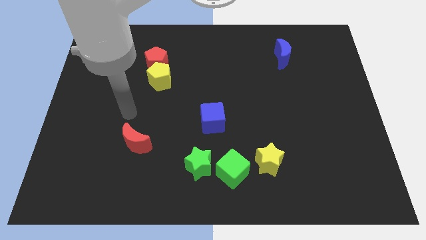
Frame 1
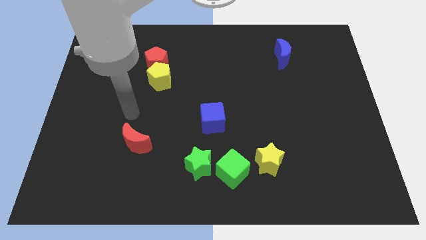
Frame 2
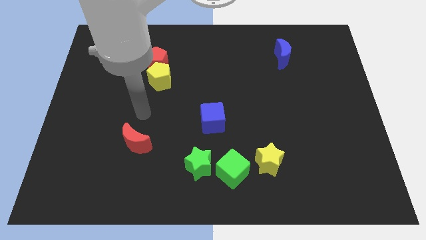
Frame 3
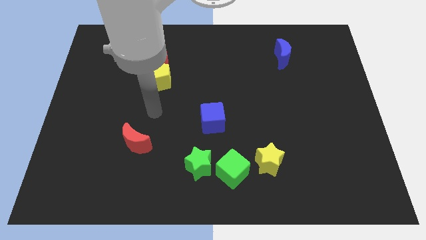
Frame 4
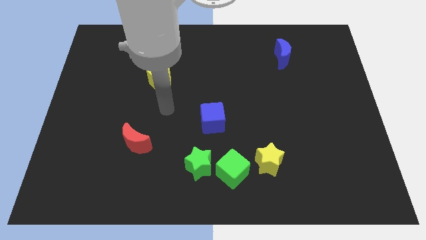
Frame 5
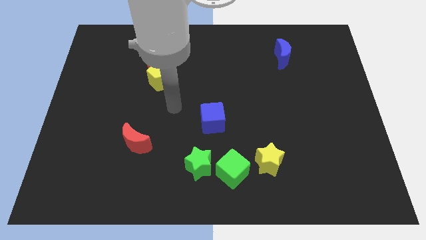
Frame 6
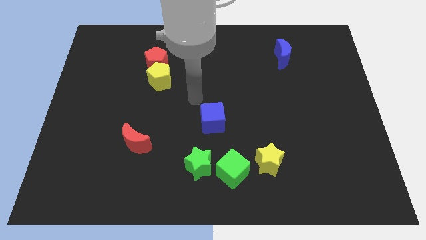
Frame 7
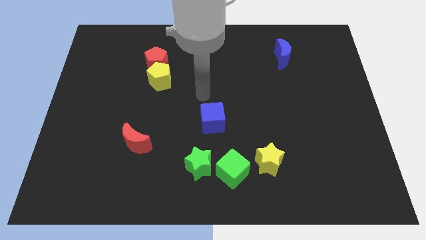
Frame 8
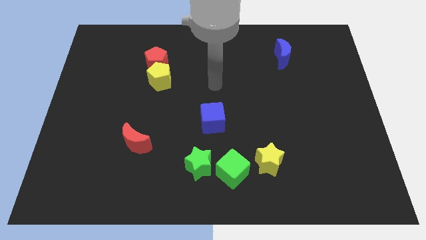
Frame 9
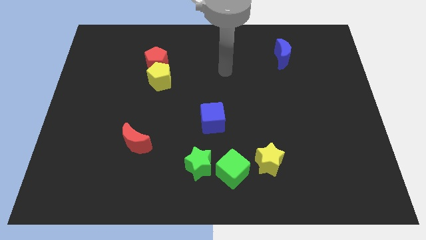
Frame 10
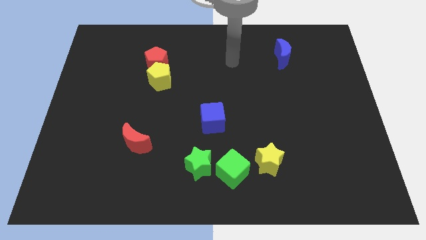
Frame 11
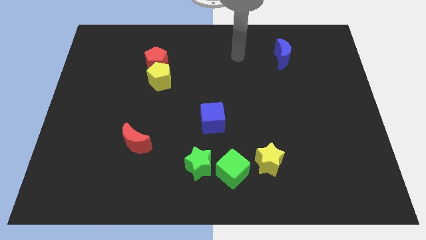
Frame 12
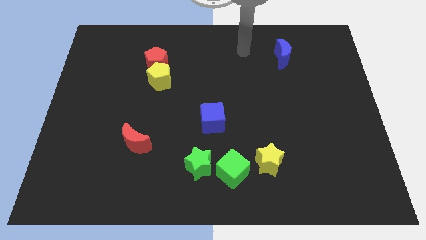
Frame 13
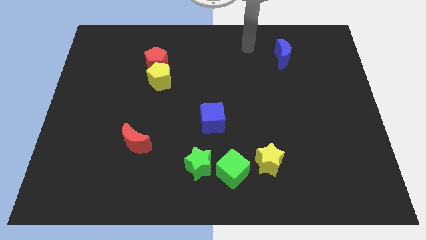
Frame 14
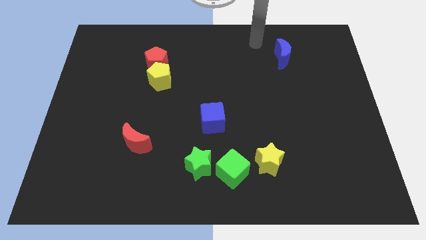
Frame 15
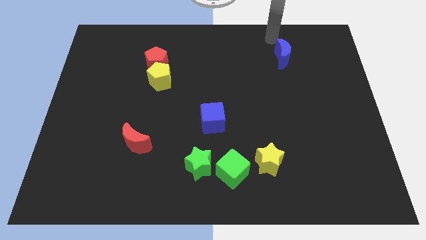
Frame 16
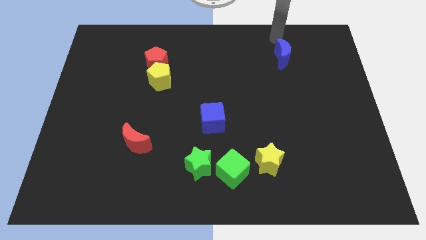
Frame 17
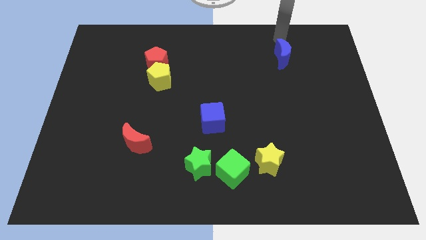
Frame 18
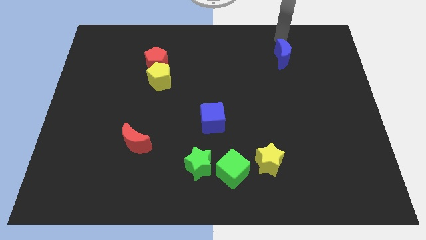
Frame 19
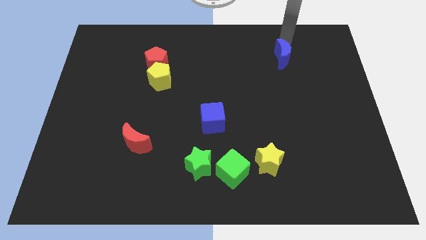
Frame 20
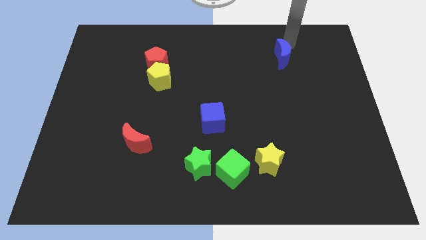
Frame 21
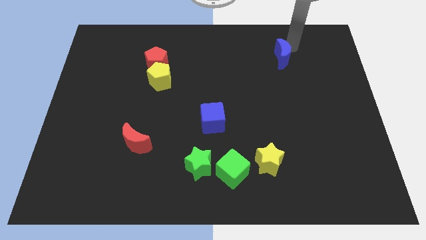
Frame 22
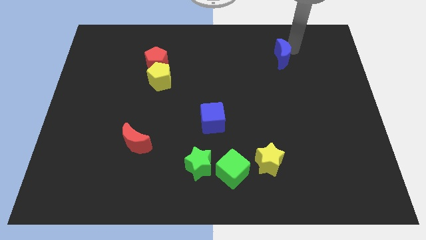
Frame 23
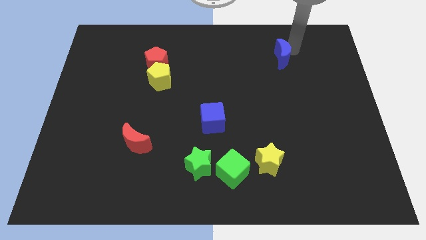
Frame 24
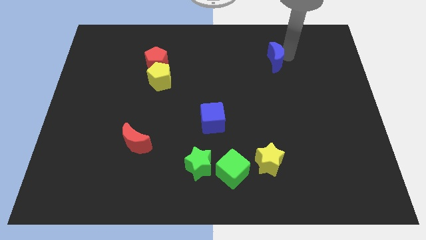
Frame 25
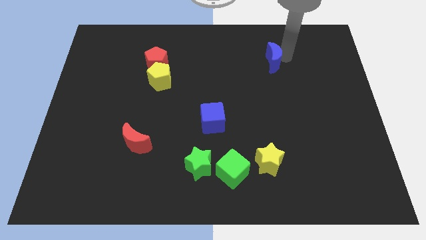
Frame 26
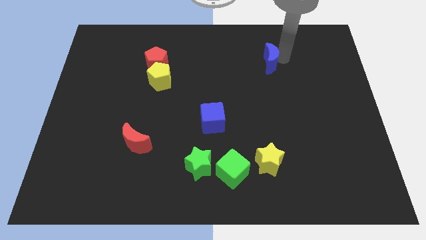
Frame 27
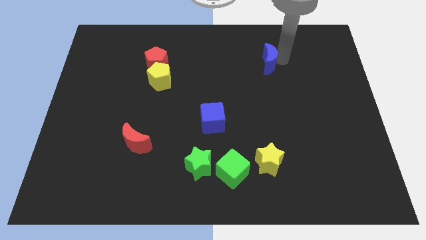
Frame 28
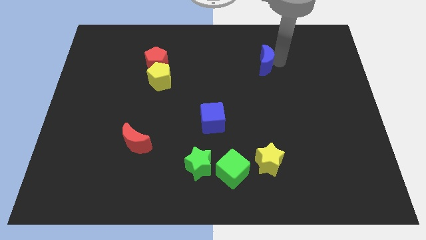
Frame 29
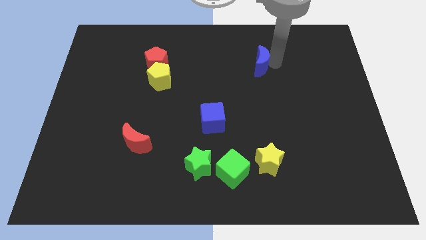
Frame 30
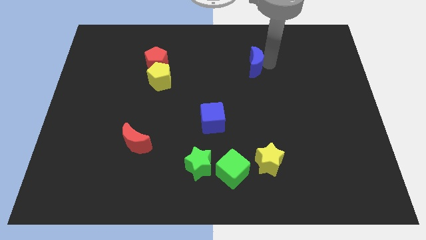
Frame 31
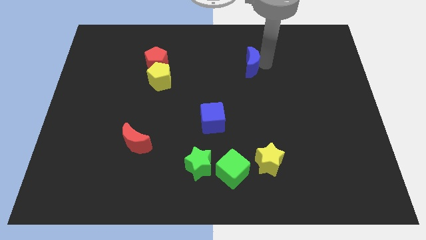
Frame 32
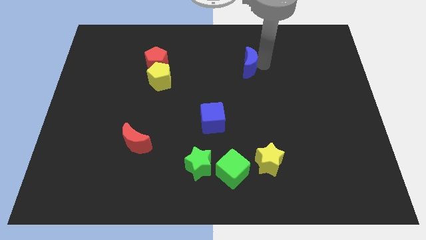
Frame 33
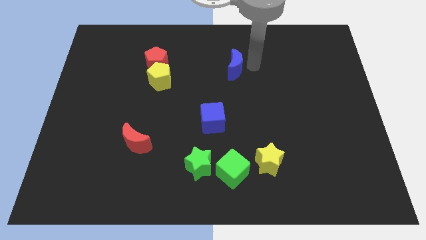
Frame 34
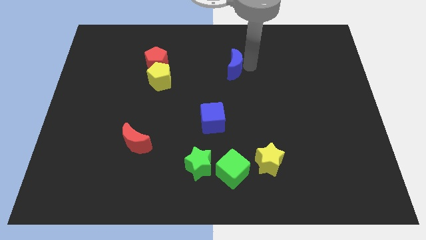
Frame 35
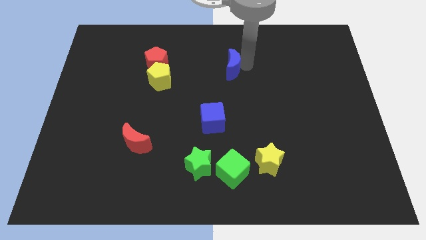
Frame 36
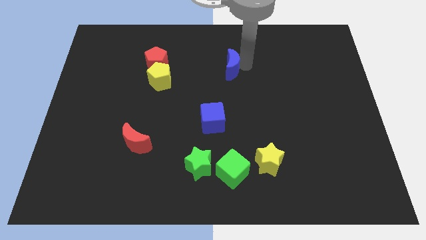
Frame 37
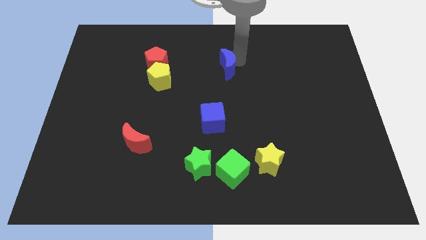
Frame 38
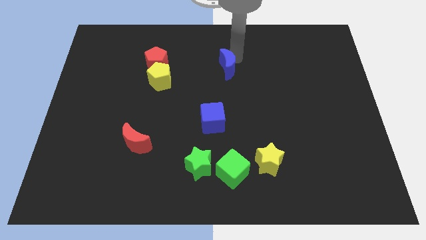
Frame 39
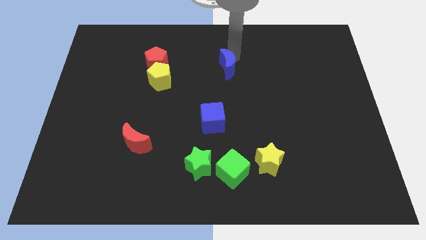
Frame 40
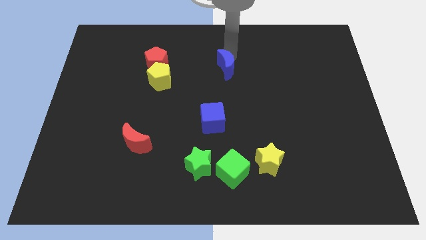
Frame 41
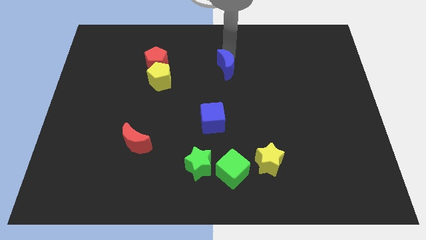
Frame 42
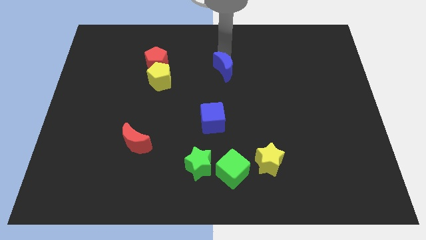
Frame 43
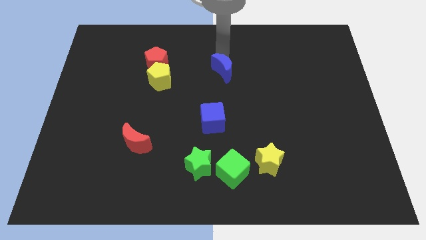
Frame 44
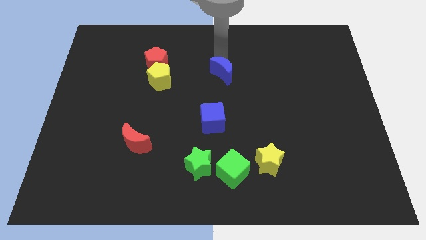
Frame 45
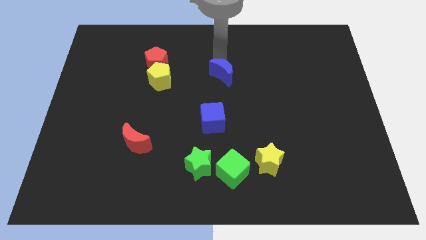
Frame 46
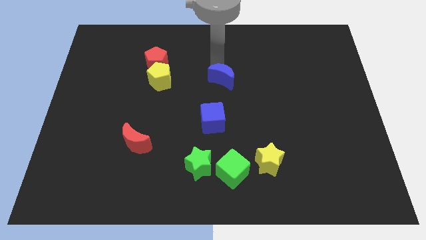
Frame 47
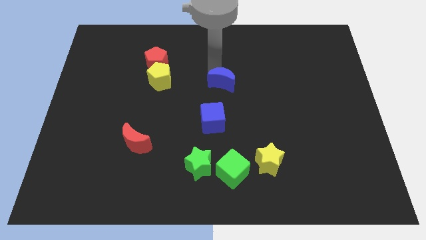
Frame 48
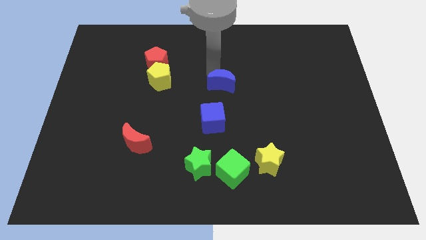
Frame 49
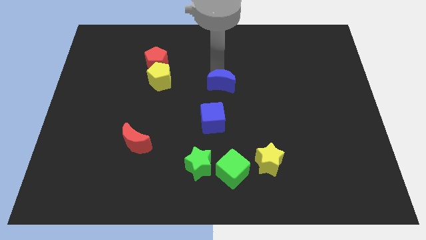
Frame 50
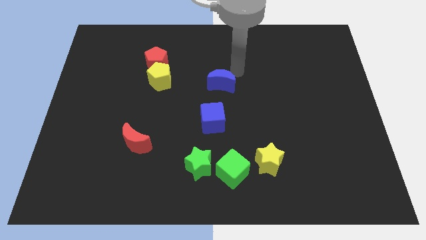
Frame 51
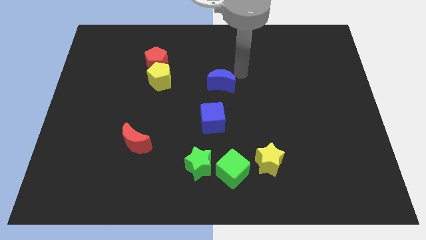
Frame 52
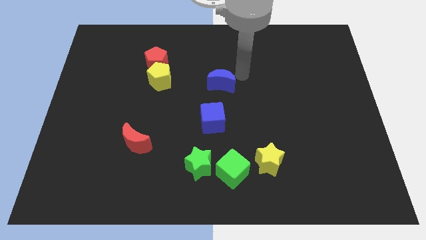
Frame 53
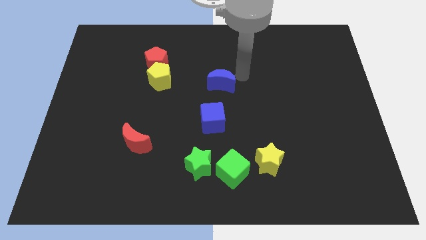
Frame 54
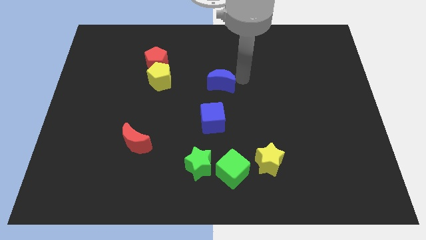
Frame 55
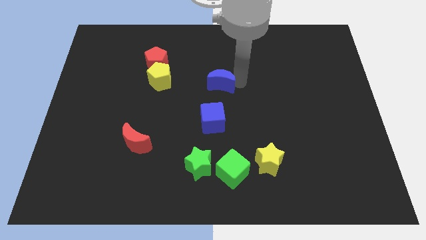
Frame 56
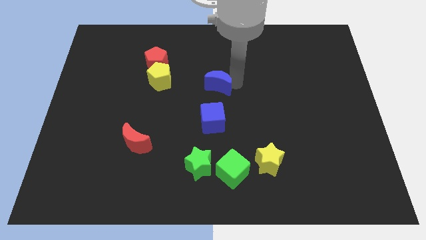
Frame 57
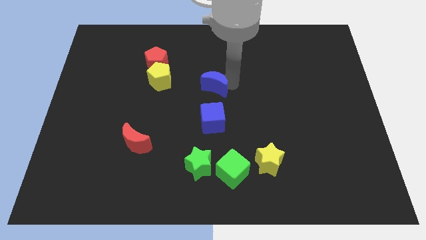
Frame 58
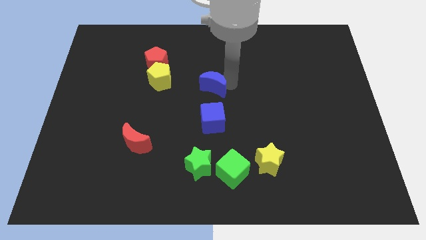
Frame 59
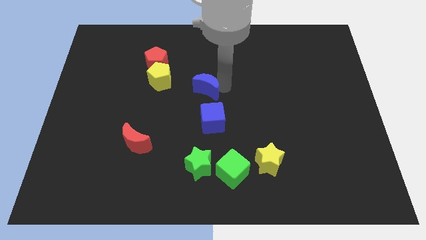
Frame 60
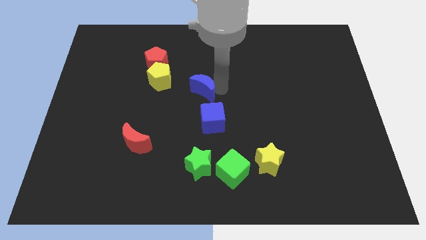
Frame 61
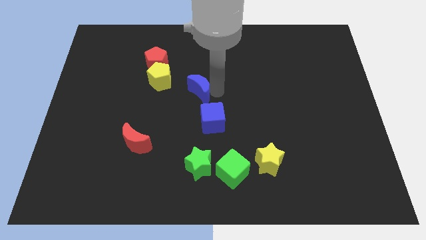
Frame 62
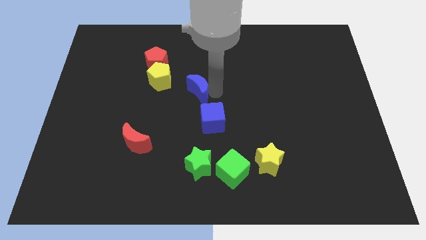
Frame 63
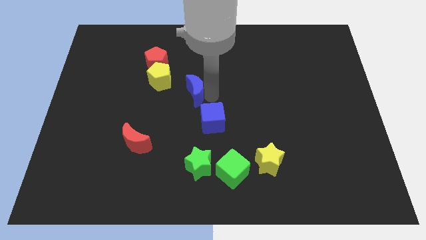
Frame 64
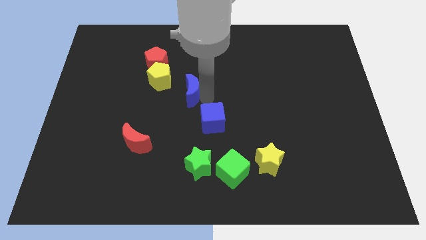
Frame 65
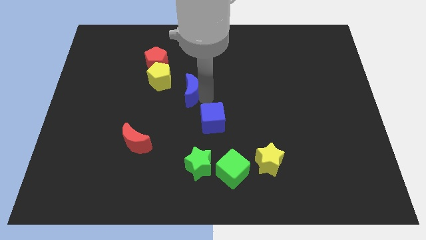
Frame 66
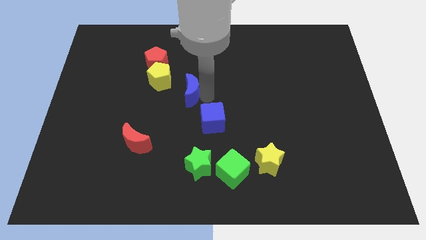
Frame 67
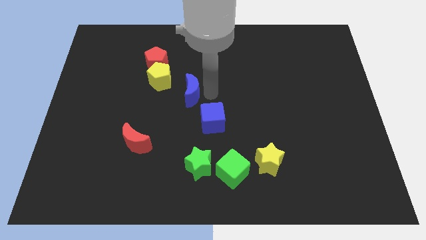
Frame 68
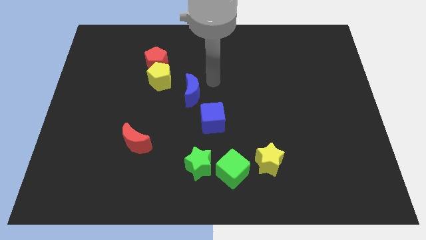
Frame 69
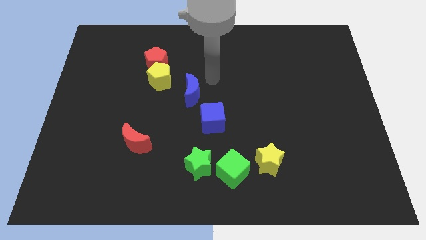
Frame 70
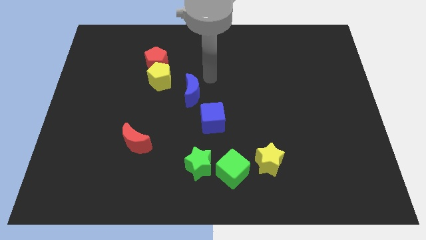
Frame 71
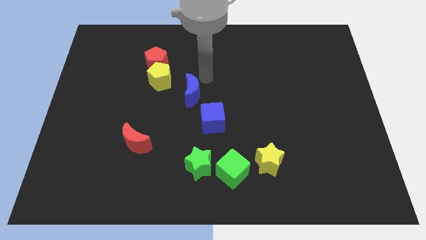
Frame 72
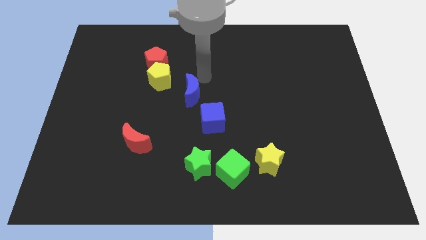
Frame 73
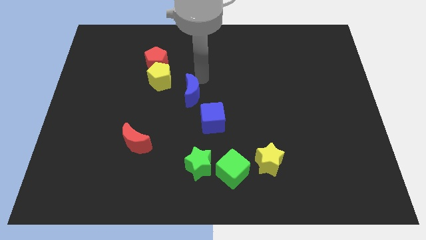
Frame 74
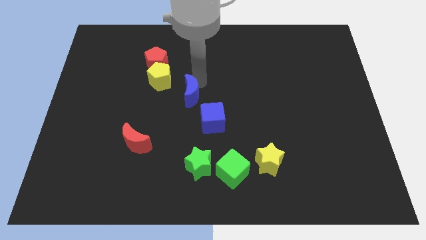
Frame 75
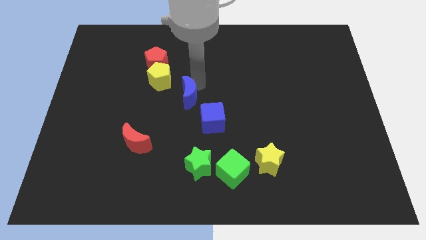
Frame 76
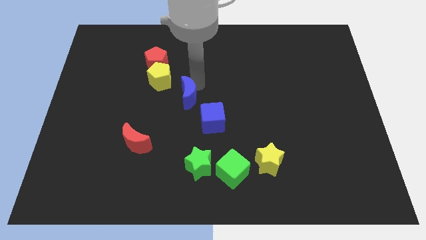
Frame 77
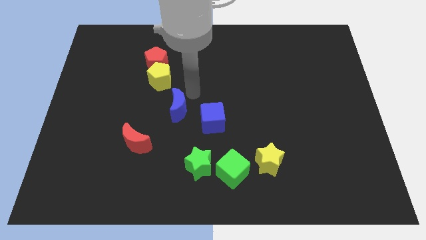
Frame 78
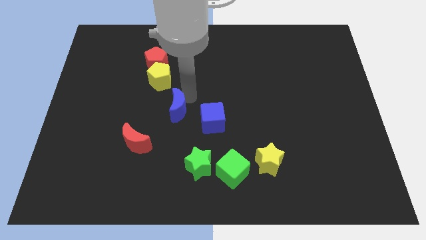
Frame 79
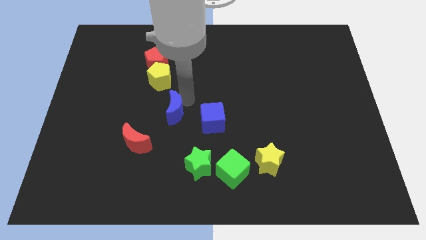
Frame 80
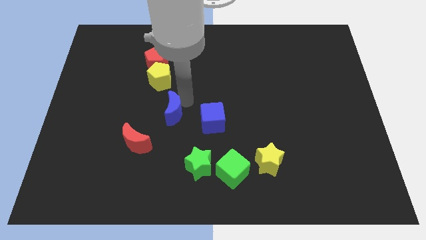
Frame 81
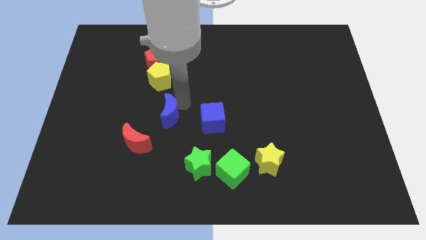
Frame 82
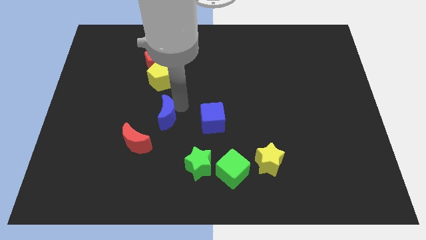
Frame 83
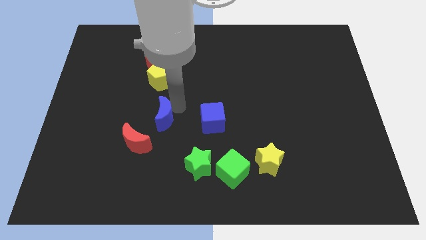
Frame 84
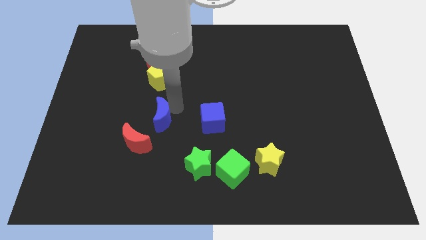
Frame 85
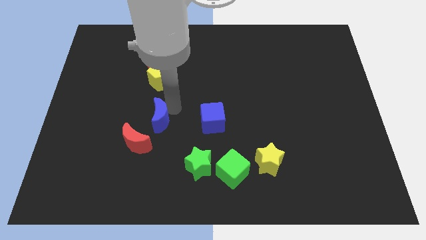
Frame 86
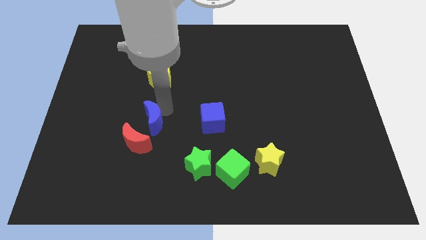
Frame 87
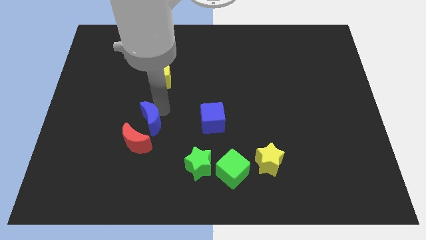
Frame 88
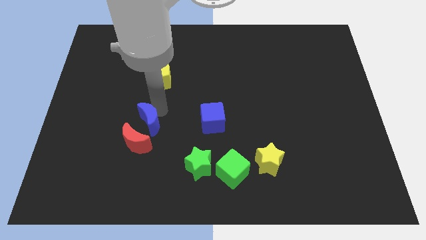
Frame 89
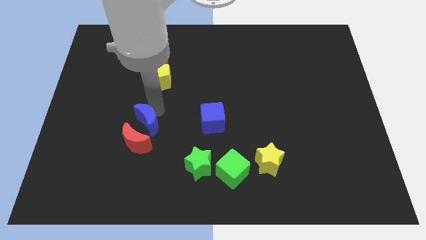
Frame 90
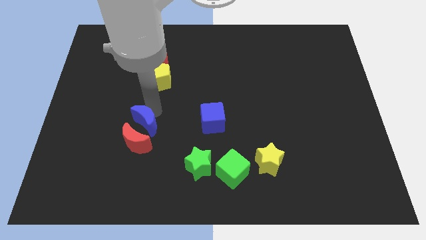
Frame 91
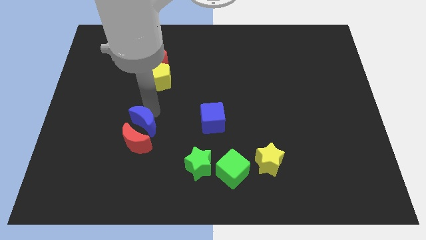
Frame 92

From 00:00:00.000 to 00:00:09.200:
slide the blue moon towards the red moon
